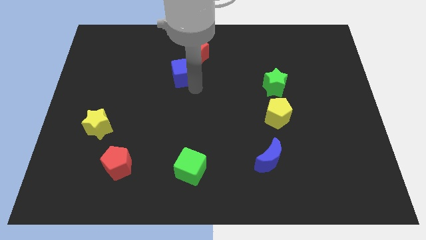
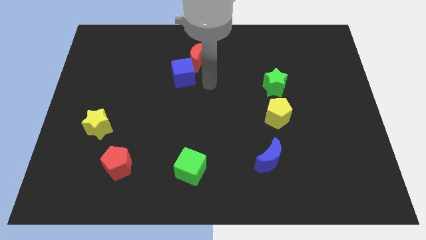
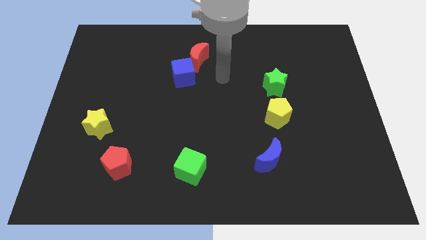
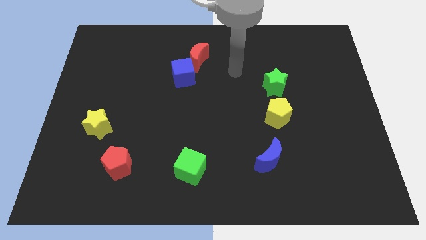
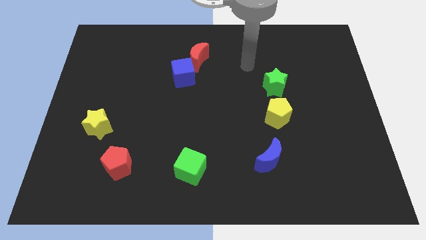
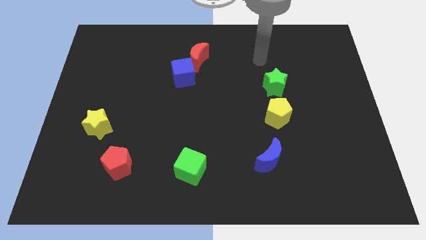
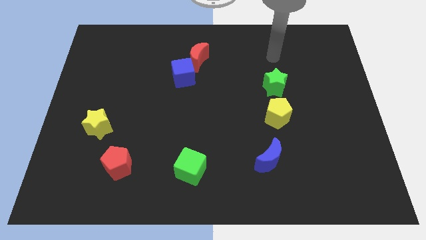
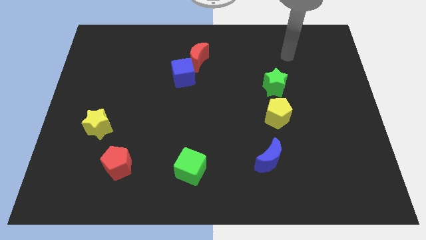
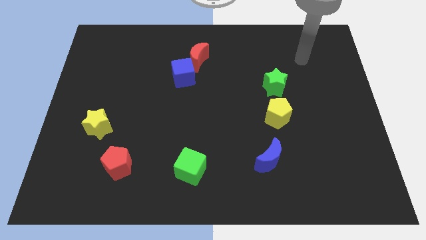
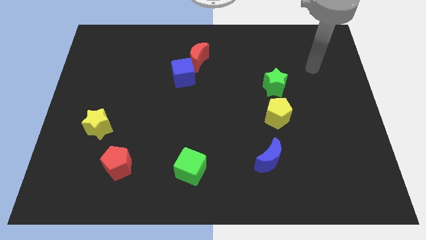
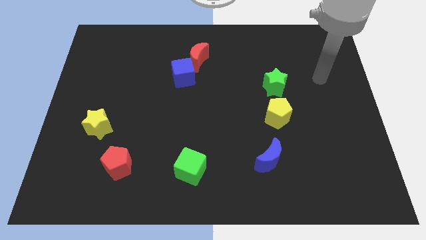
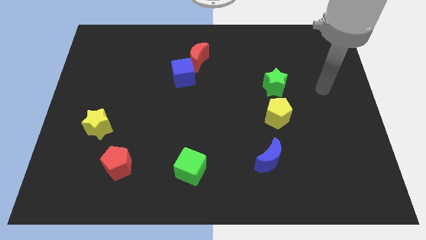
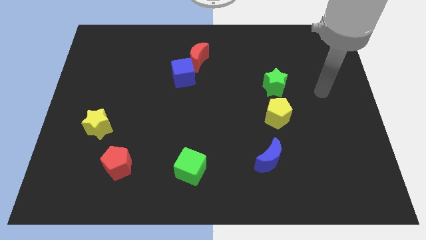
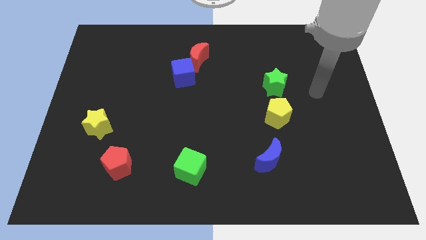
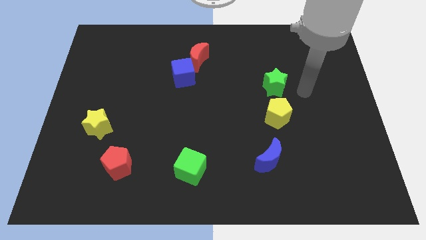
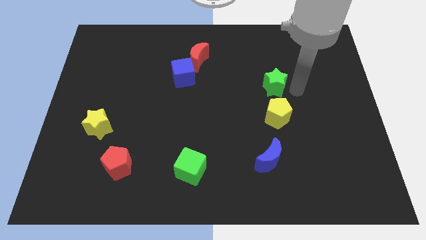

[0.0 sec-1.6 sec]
move robot arm towards green star

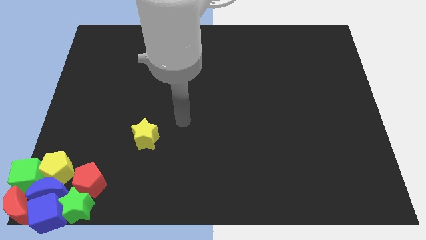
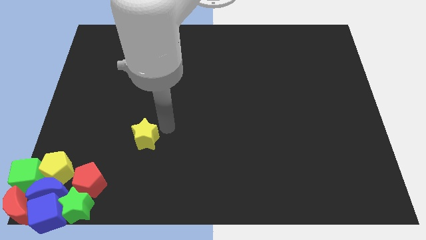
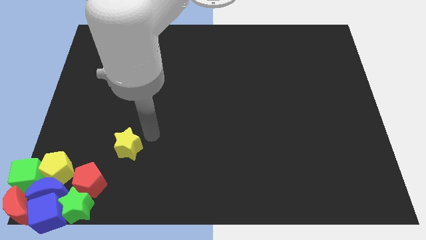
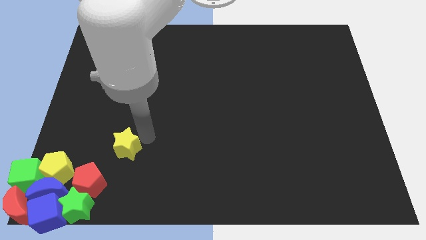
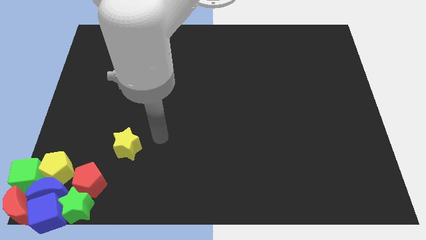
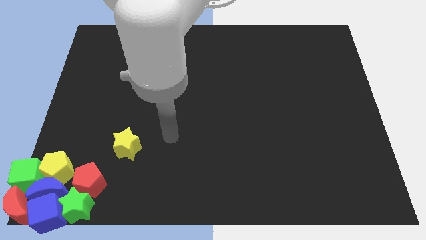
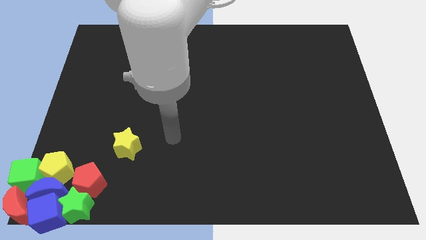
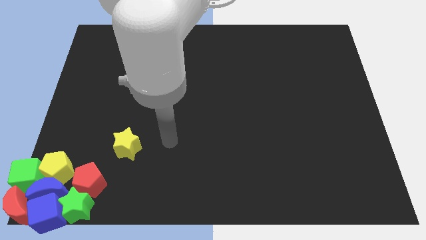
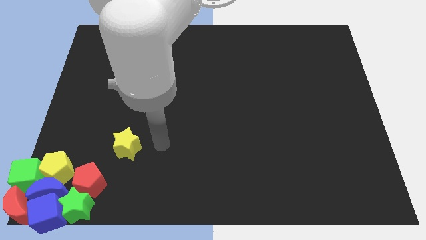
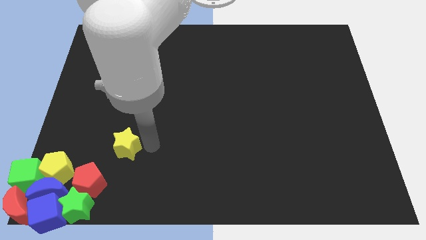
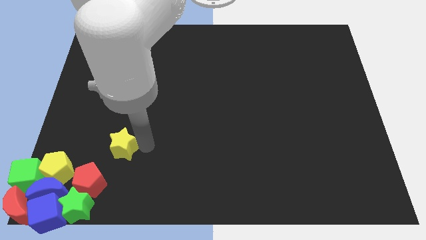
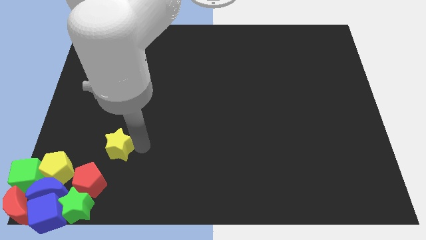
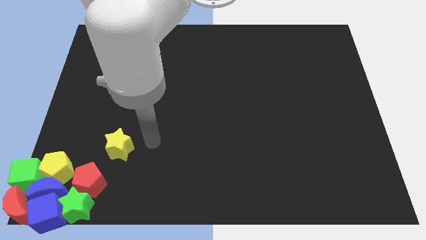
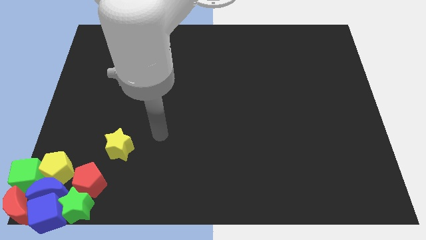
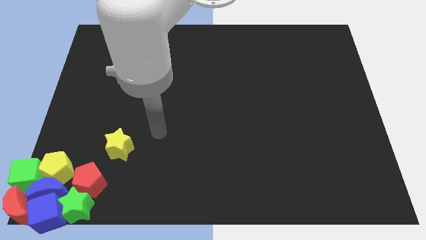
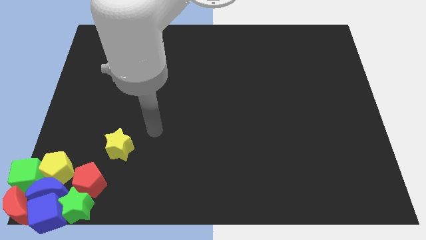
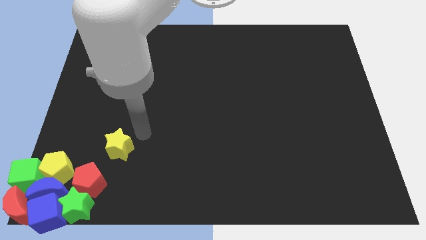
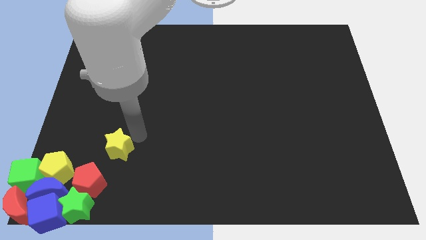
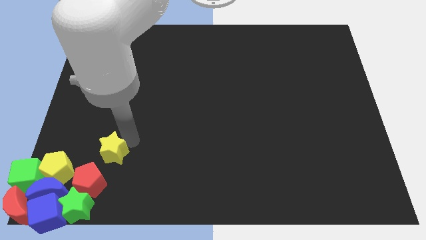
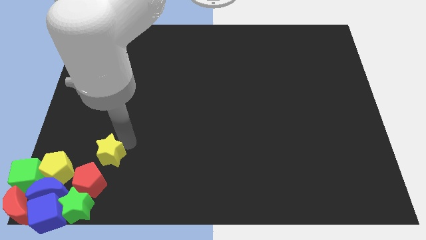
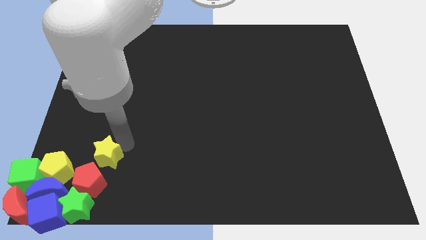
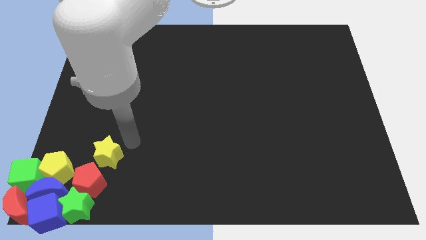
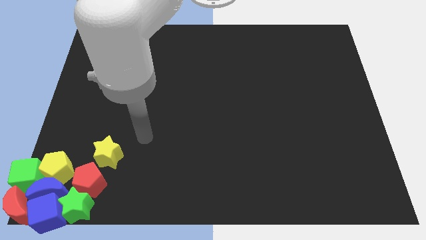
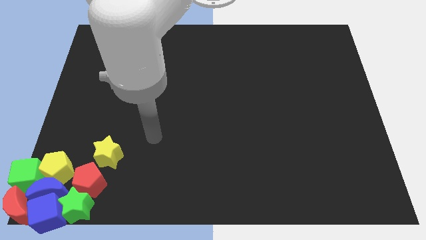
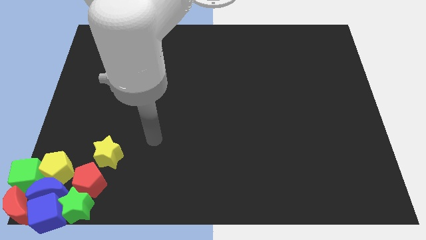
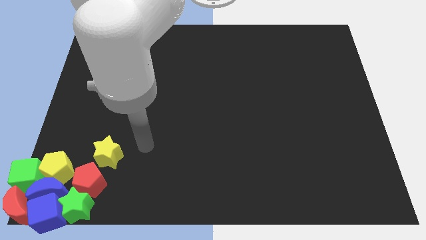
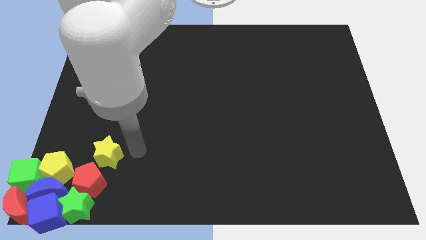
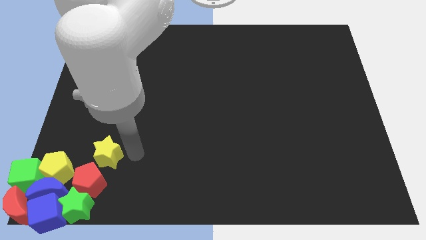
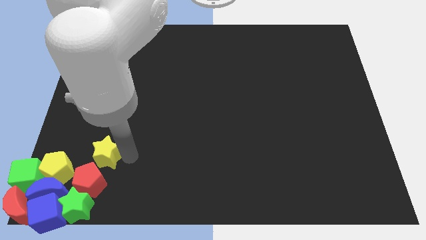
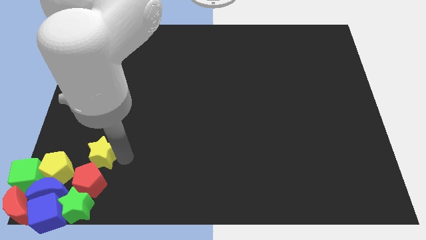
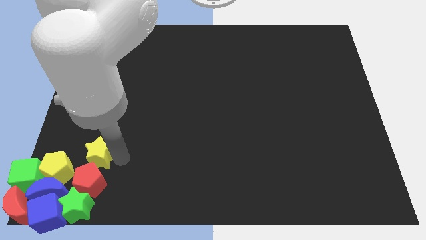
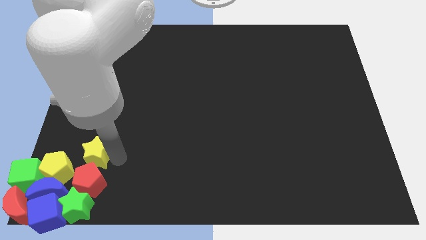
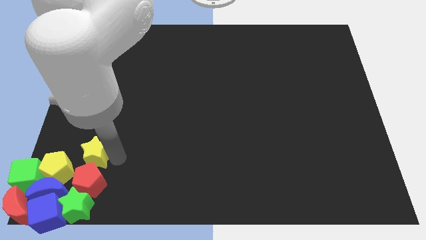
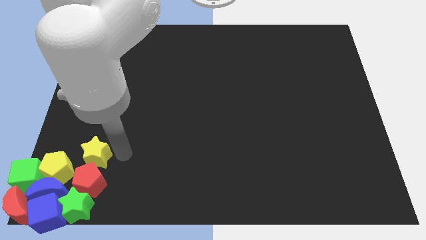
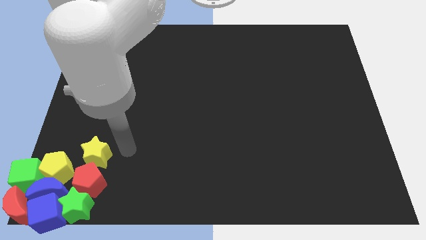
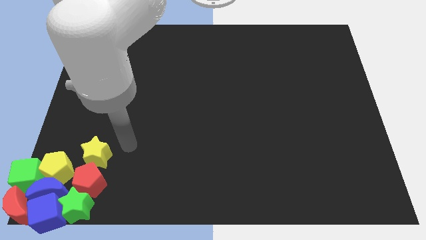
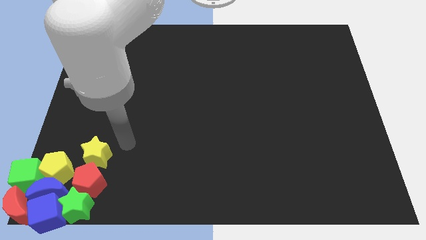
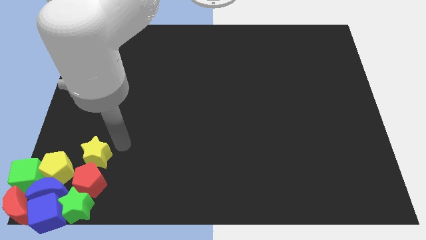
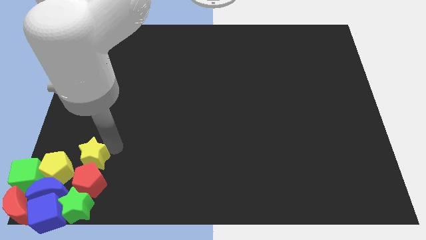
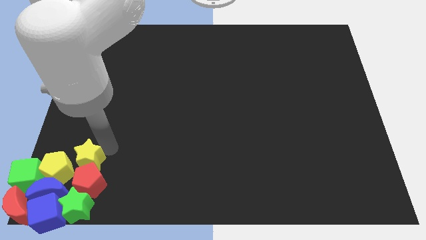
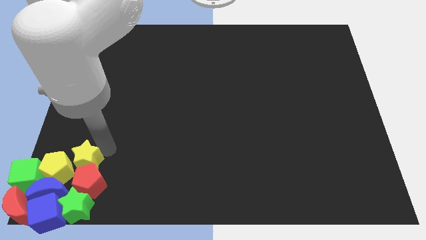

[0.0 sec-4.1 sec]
put the yellow star to the top side of the red pentagon

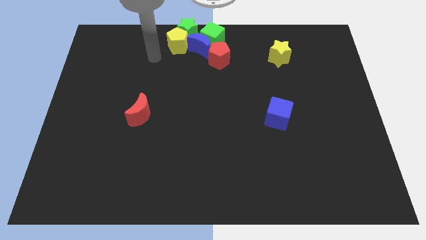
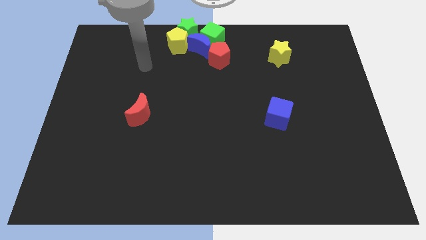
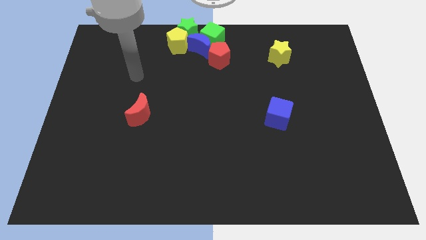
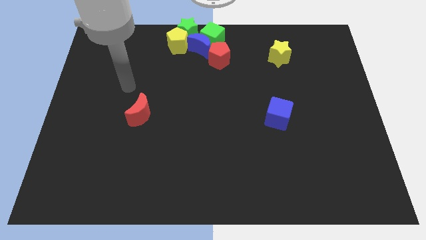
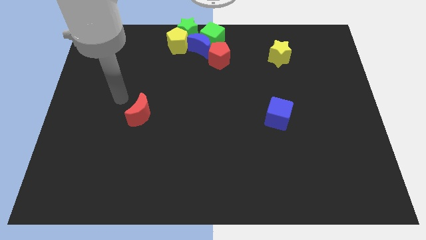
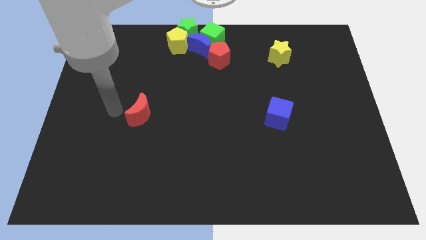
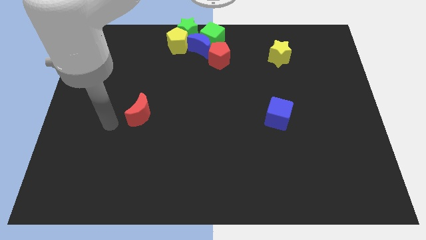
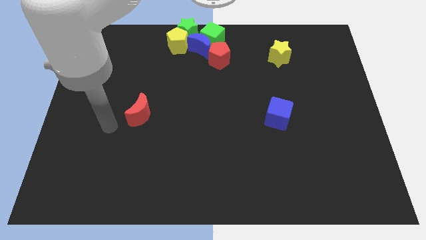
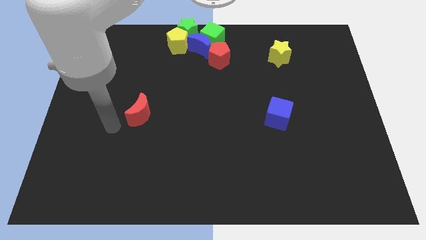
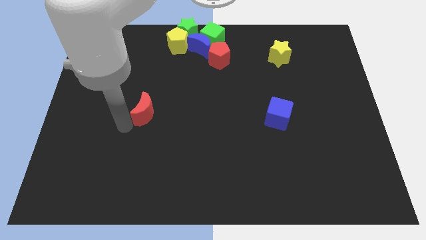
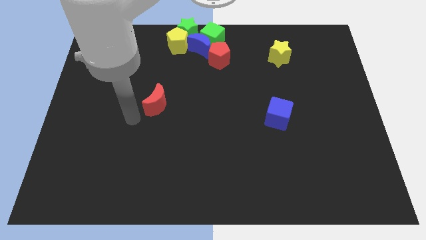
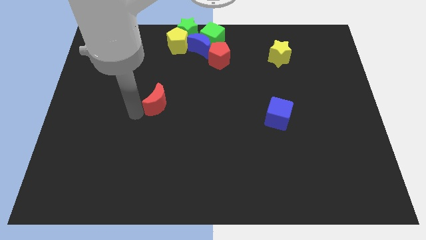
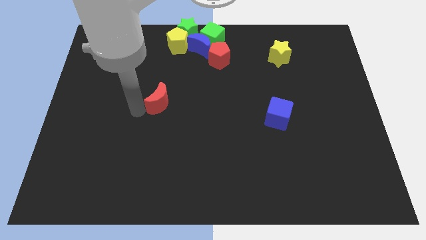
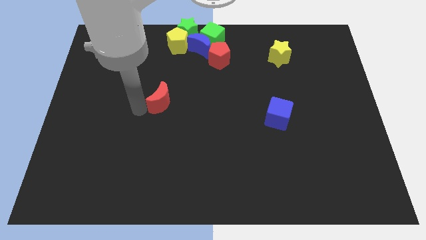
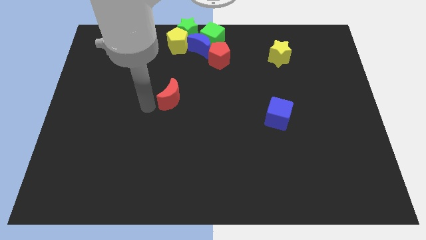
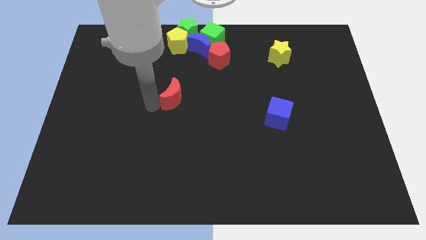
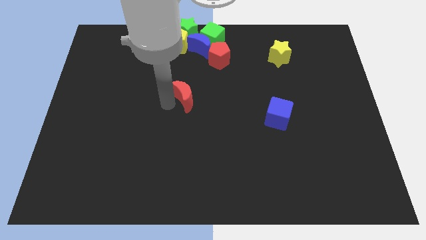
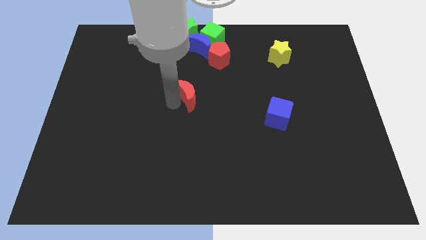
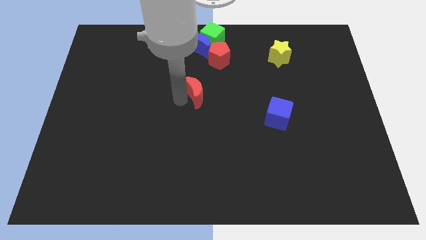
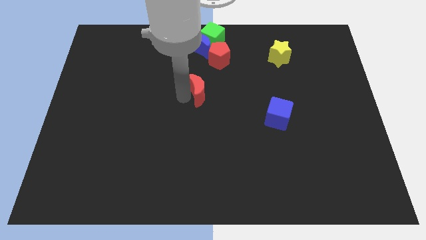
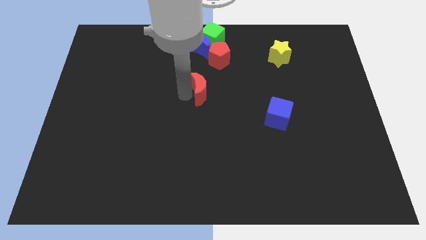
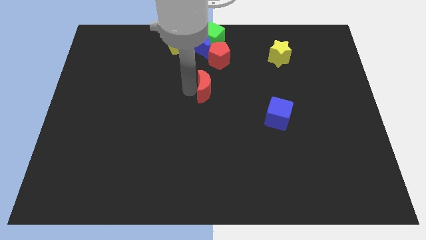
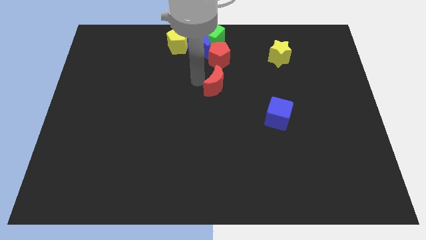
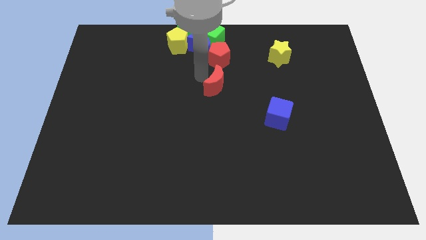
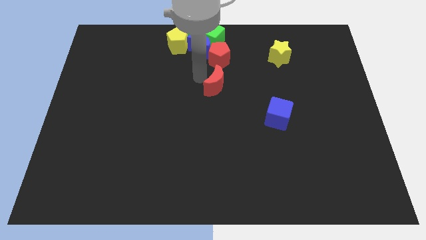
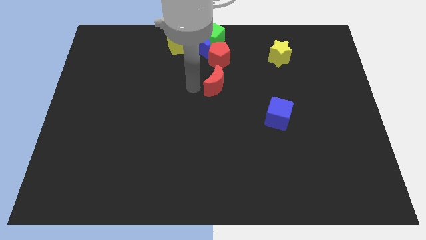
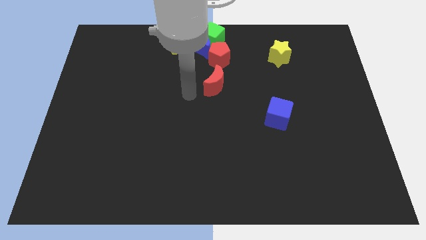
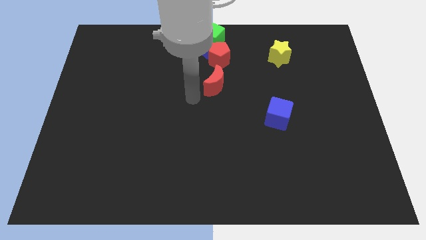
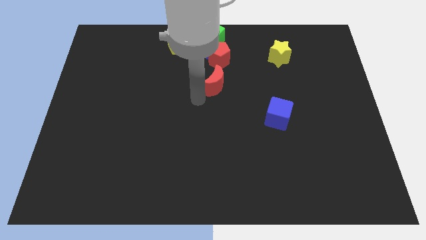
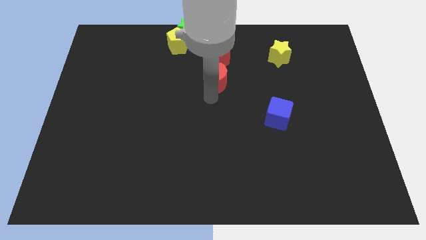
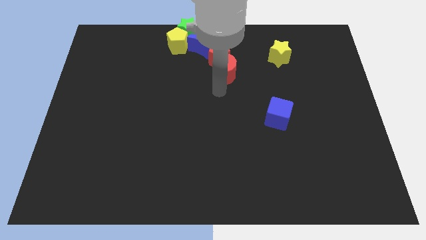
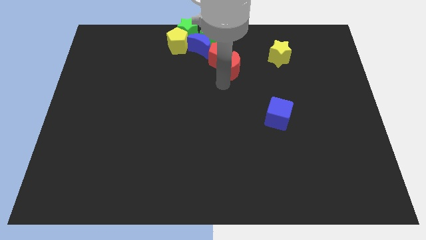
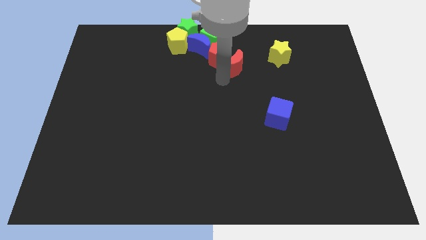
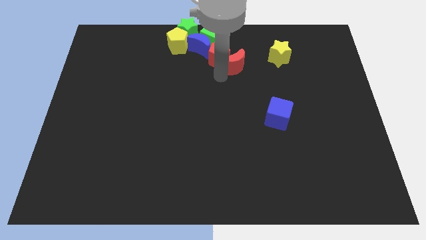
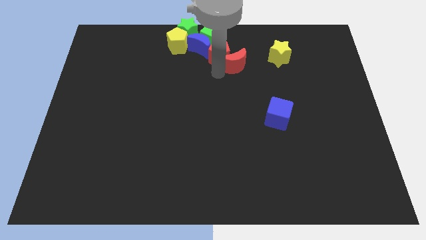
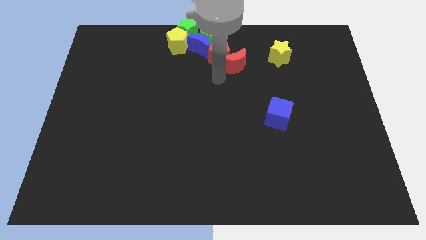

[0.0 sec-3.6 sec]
slide the red moon into the red pentagon
